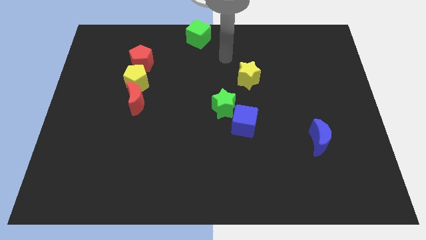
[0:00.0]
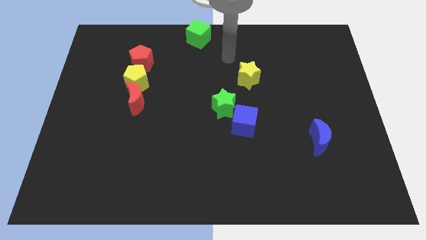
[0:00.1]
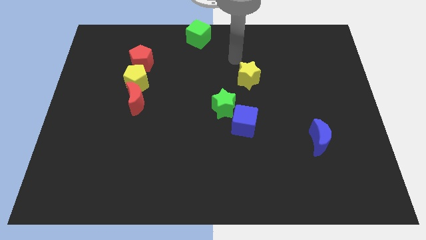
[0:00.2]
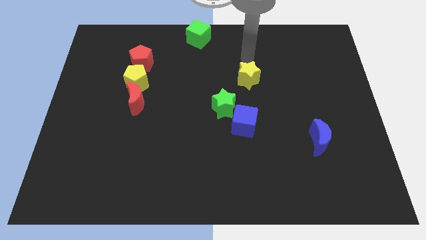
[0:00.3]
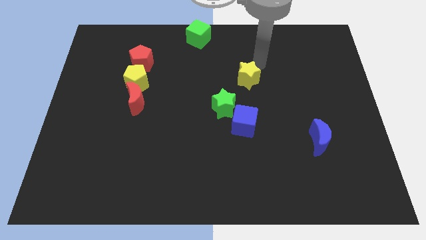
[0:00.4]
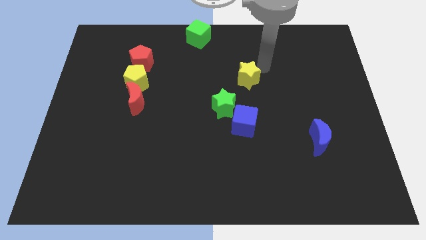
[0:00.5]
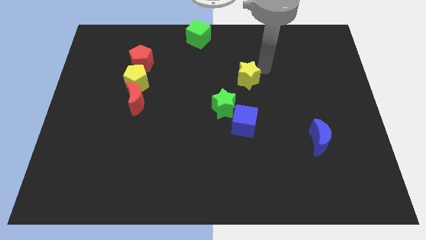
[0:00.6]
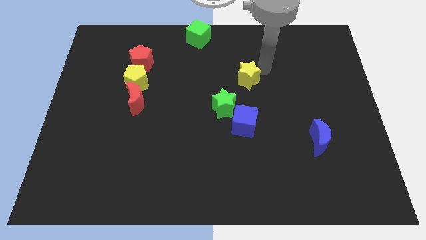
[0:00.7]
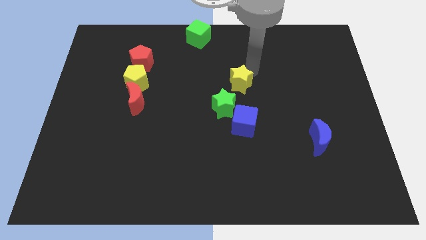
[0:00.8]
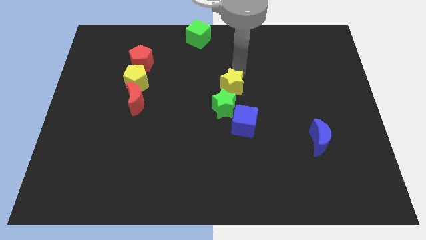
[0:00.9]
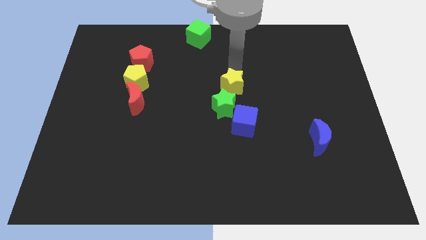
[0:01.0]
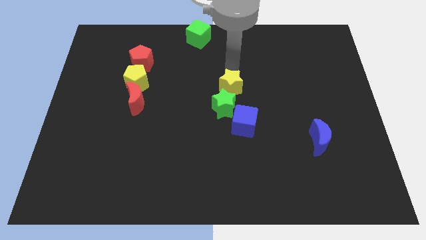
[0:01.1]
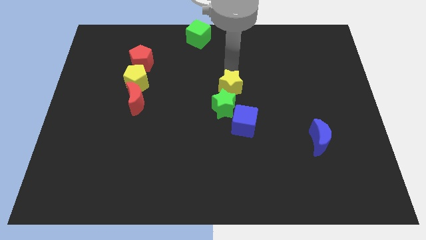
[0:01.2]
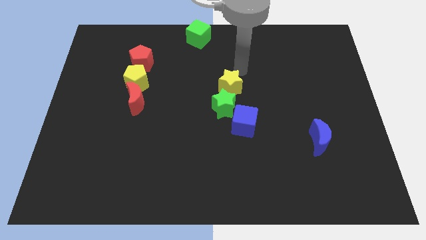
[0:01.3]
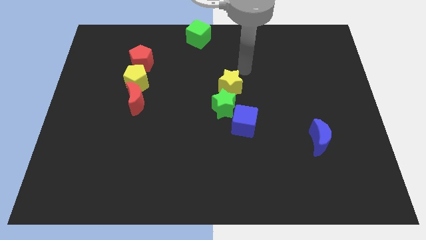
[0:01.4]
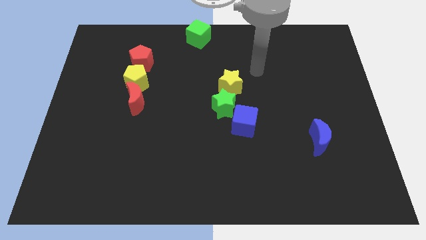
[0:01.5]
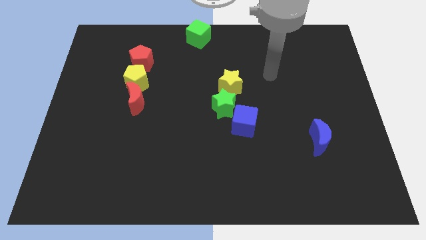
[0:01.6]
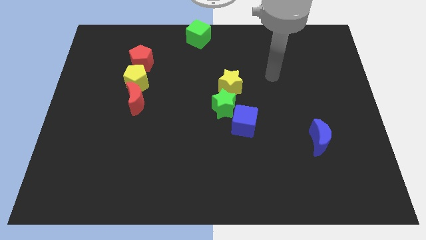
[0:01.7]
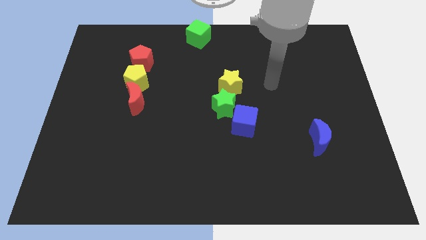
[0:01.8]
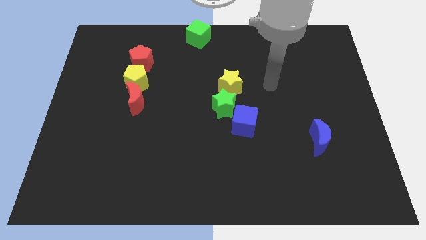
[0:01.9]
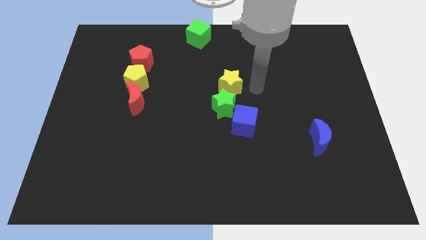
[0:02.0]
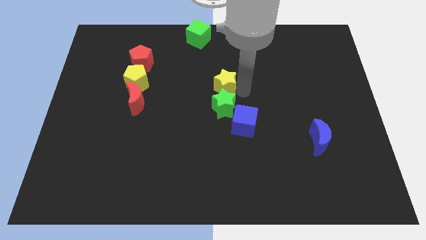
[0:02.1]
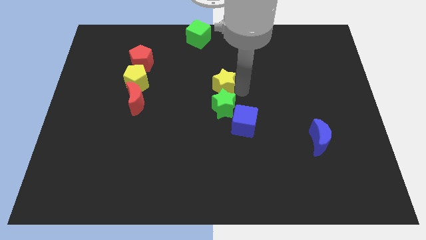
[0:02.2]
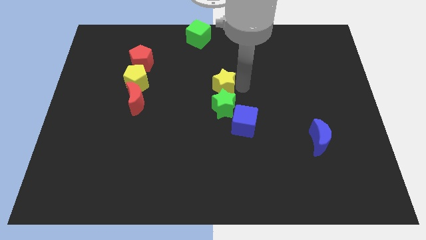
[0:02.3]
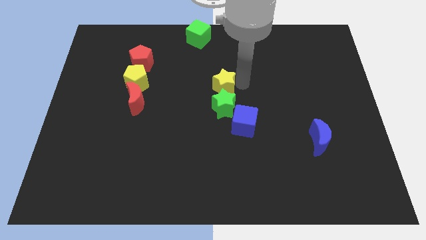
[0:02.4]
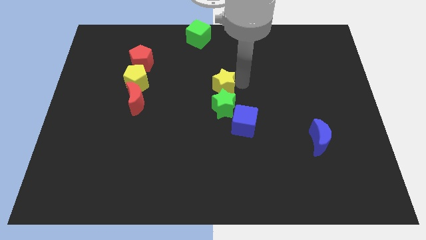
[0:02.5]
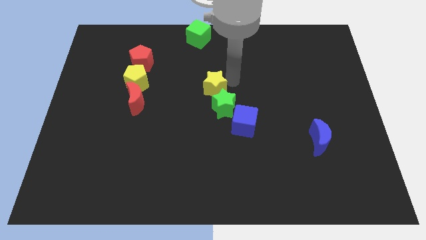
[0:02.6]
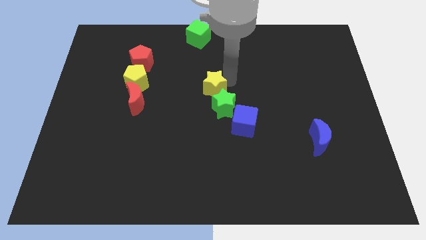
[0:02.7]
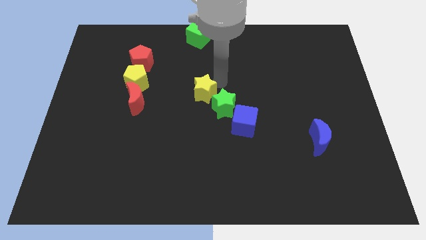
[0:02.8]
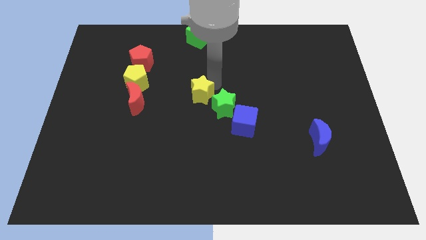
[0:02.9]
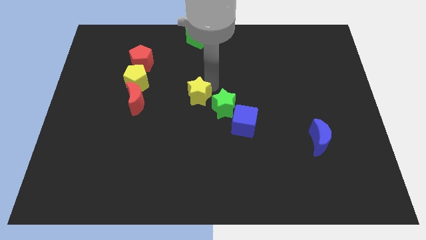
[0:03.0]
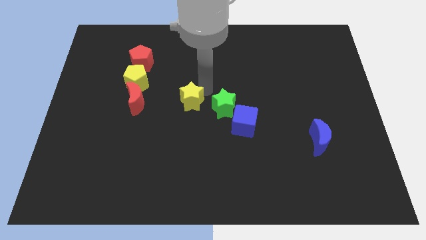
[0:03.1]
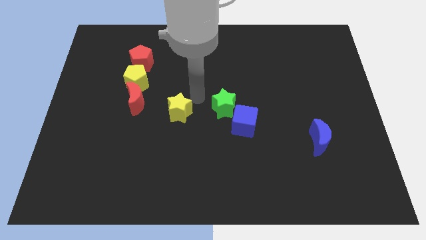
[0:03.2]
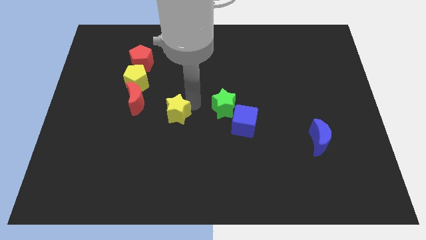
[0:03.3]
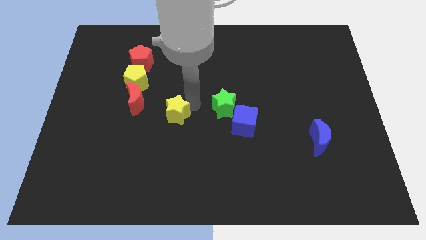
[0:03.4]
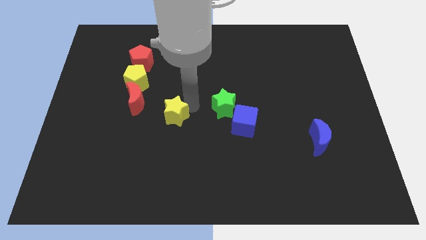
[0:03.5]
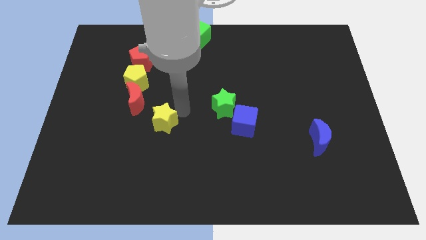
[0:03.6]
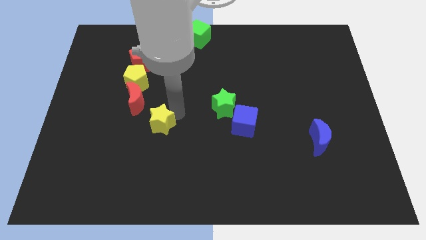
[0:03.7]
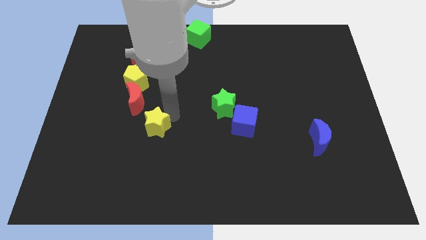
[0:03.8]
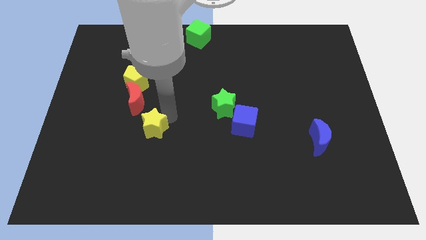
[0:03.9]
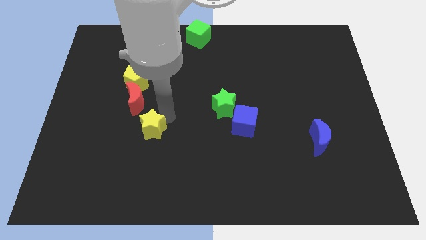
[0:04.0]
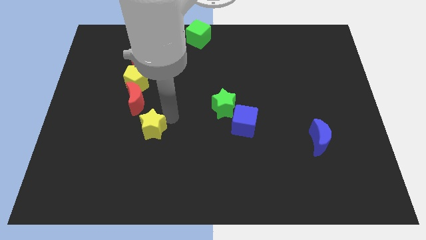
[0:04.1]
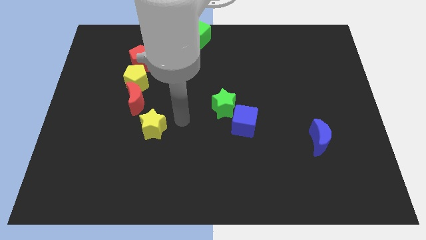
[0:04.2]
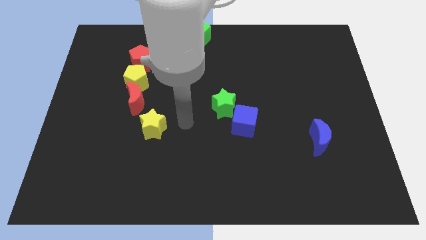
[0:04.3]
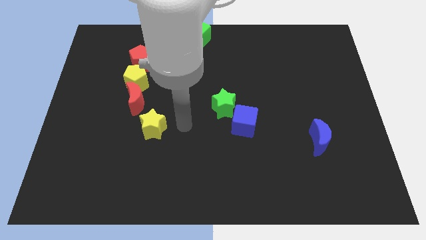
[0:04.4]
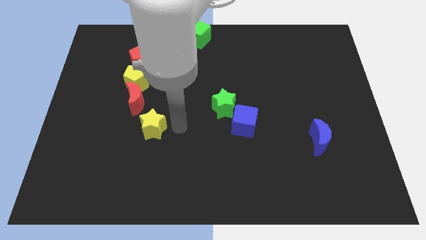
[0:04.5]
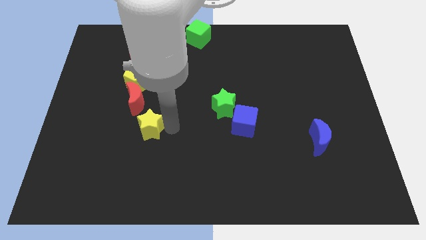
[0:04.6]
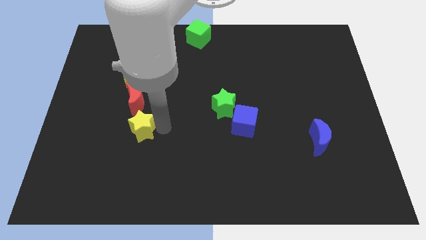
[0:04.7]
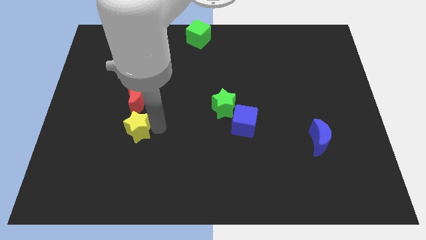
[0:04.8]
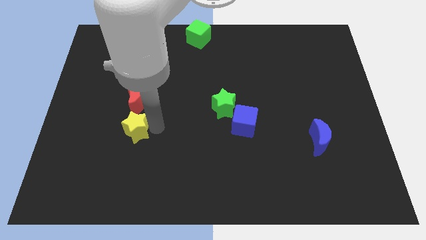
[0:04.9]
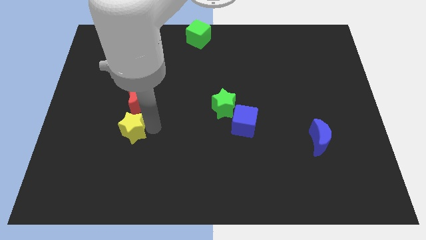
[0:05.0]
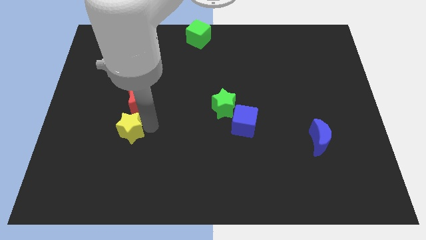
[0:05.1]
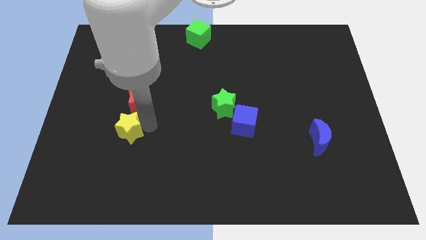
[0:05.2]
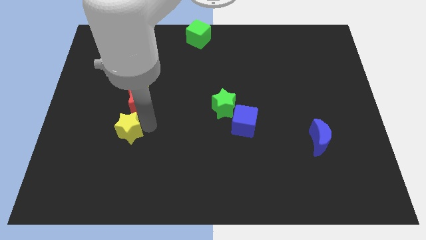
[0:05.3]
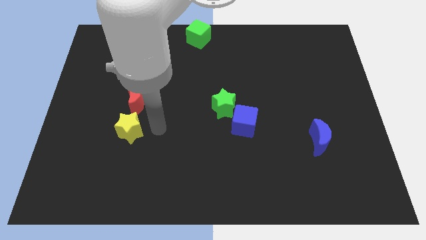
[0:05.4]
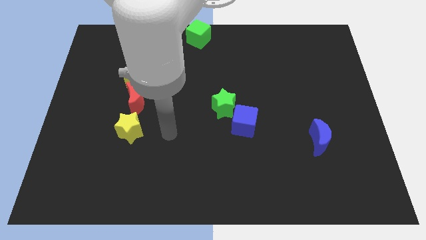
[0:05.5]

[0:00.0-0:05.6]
place the yellow star below the red crescent

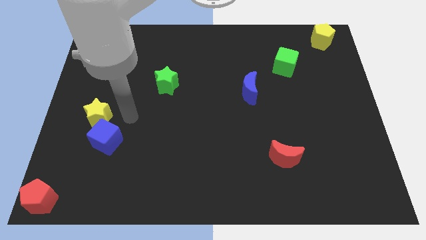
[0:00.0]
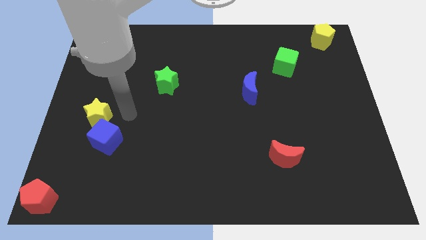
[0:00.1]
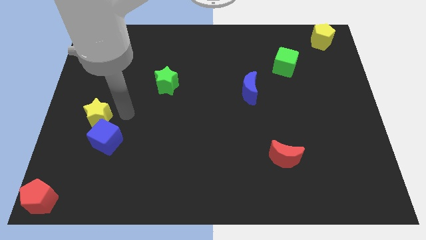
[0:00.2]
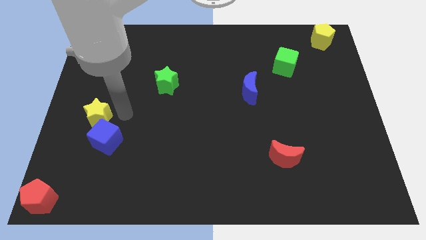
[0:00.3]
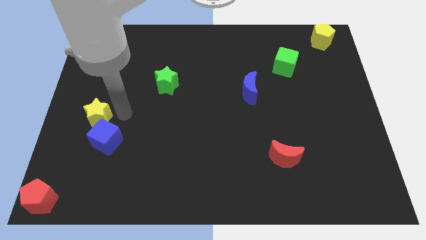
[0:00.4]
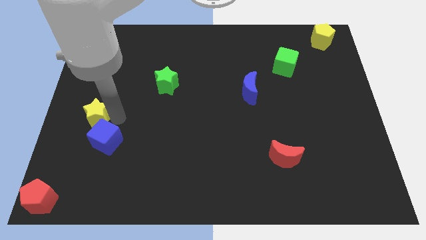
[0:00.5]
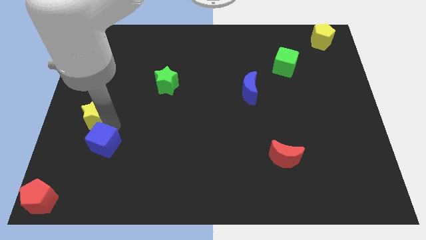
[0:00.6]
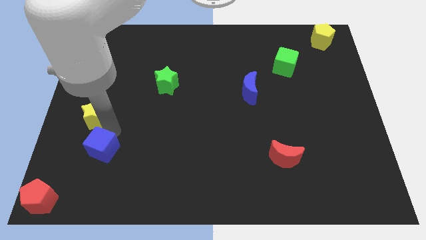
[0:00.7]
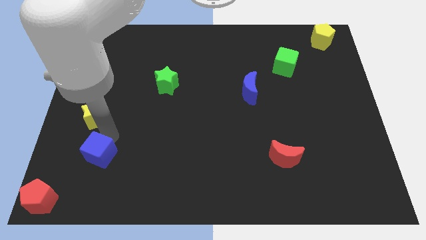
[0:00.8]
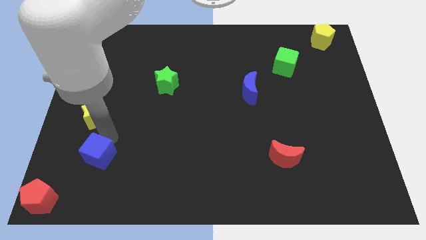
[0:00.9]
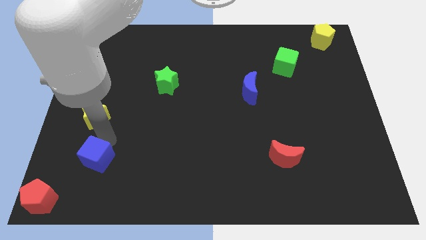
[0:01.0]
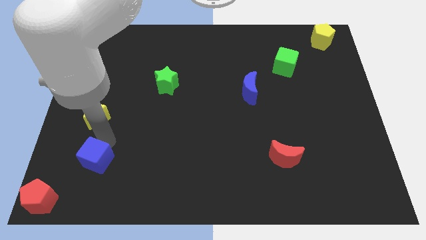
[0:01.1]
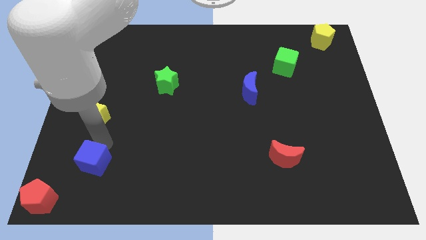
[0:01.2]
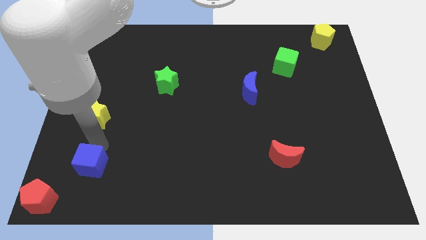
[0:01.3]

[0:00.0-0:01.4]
move the blue cube towards the top side of the red pentagon

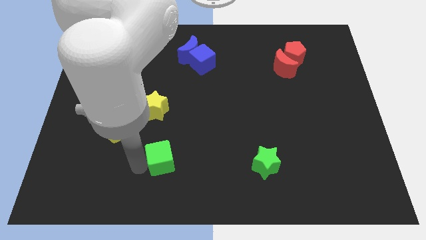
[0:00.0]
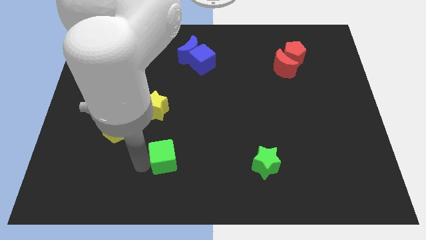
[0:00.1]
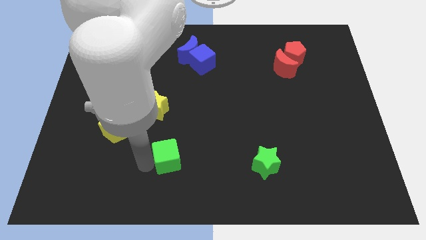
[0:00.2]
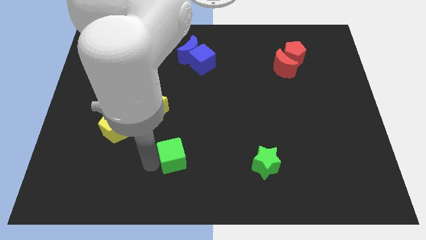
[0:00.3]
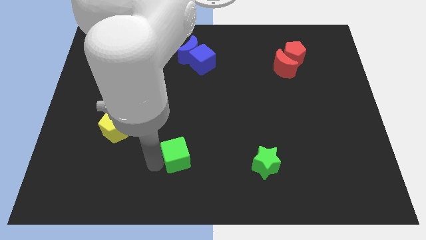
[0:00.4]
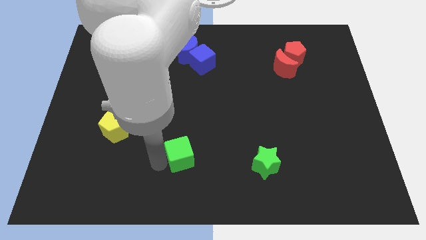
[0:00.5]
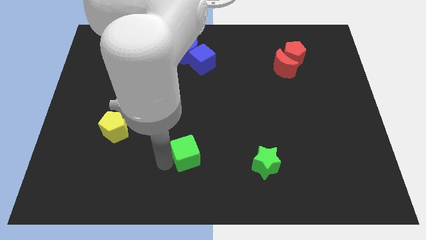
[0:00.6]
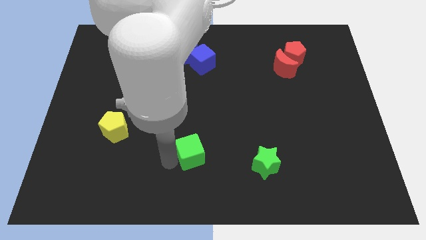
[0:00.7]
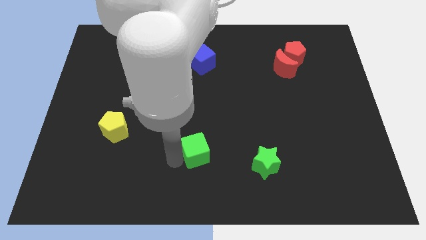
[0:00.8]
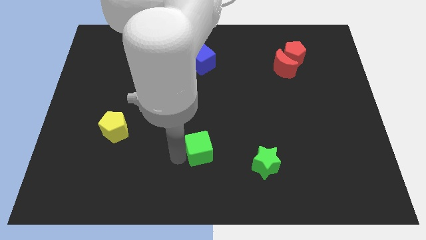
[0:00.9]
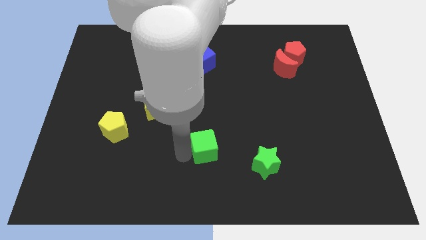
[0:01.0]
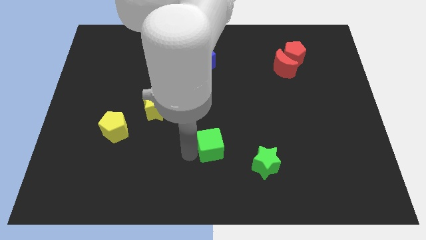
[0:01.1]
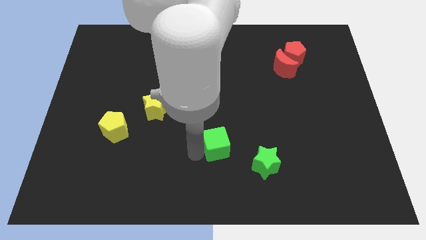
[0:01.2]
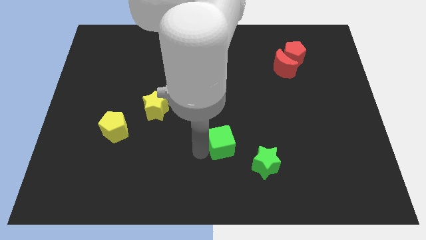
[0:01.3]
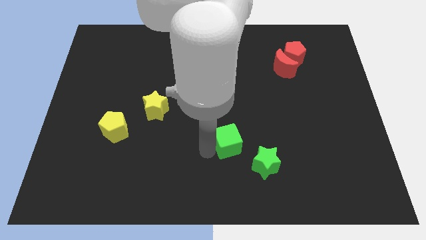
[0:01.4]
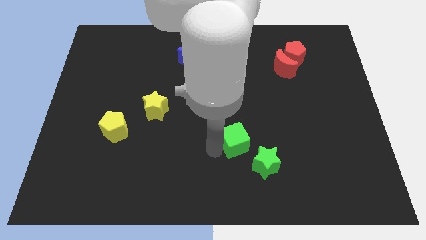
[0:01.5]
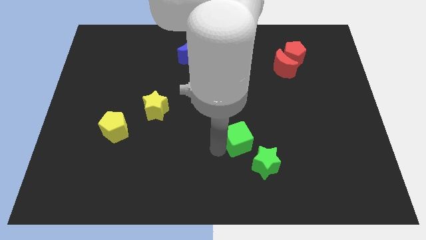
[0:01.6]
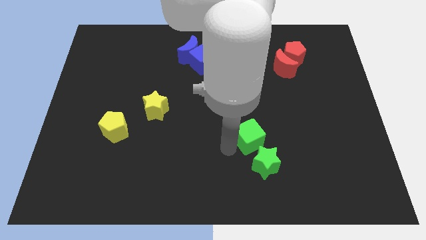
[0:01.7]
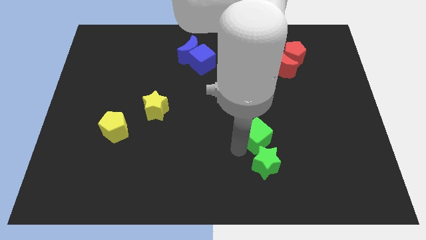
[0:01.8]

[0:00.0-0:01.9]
place green cube at the top of green star
